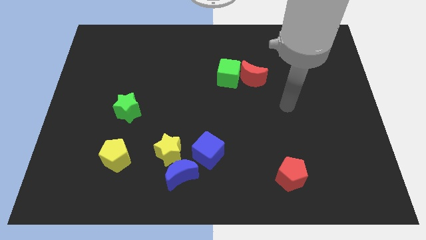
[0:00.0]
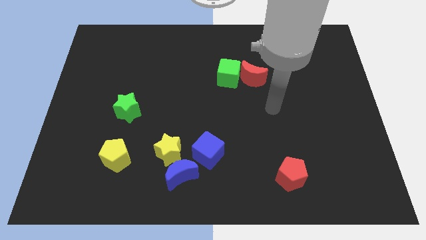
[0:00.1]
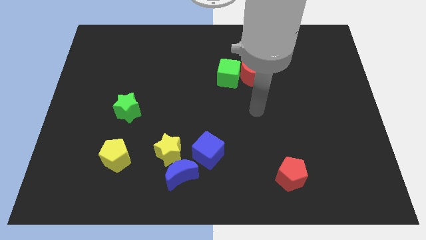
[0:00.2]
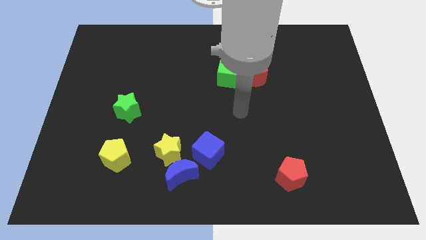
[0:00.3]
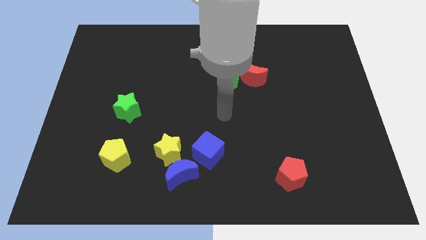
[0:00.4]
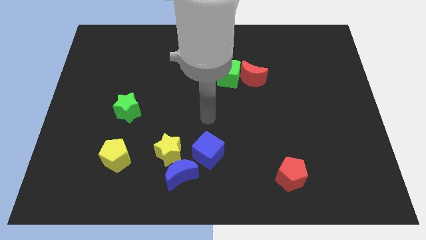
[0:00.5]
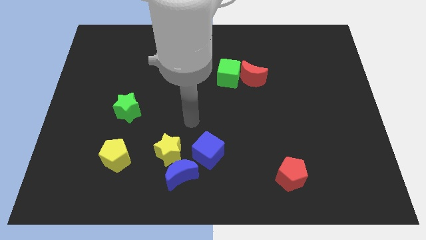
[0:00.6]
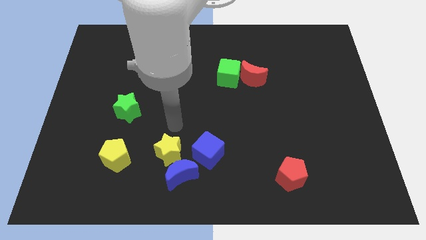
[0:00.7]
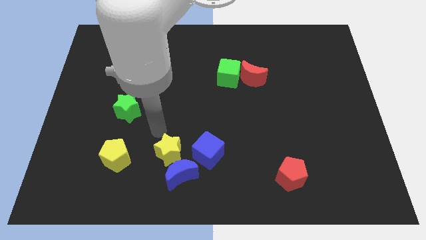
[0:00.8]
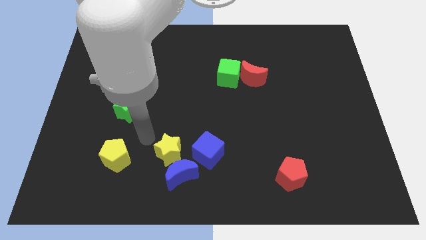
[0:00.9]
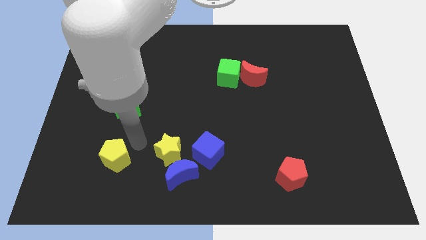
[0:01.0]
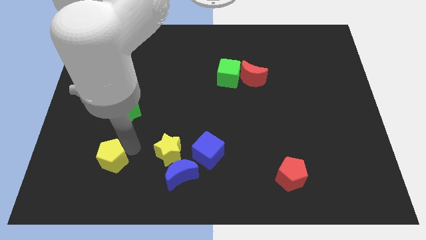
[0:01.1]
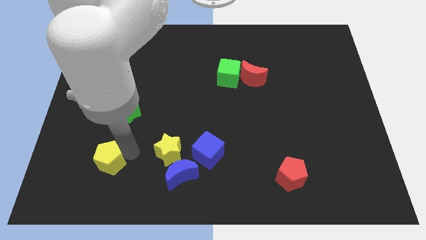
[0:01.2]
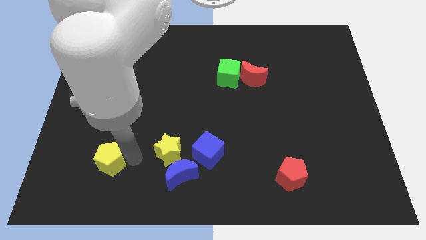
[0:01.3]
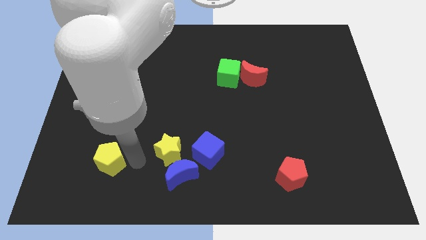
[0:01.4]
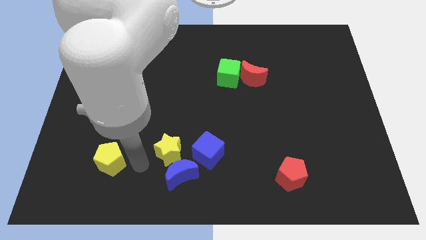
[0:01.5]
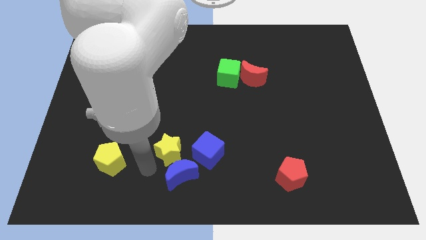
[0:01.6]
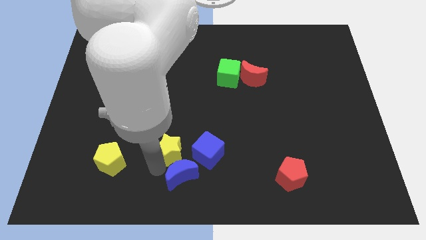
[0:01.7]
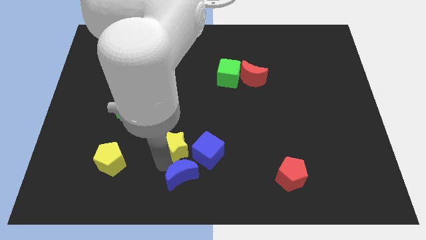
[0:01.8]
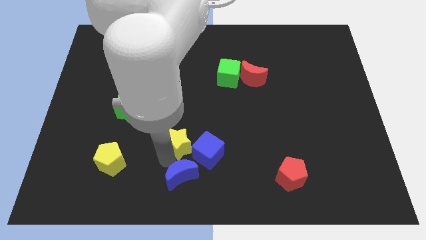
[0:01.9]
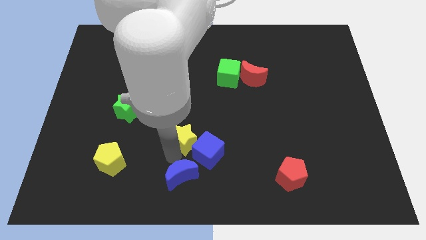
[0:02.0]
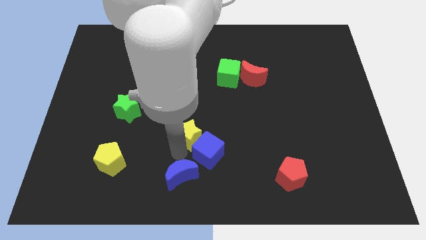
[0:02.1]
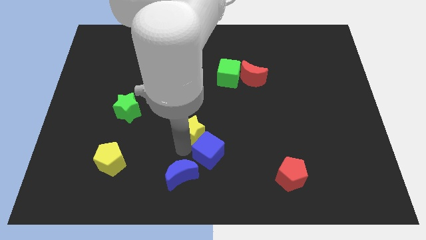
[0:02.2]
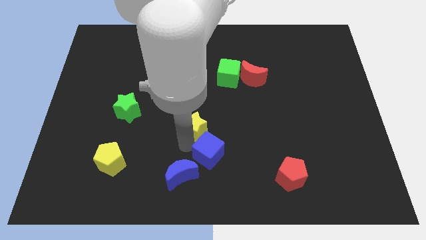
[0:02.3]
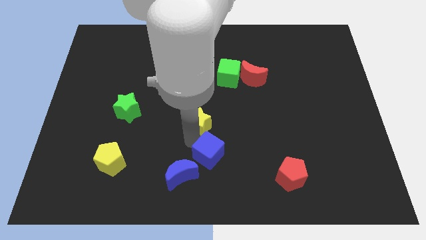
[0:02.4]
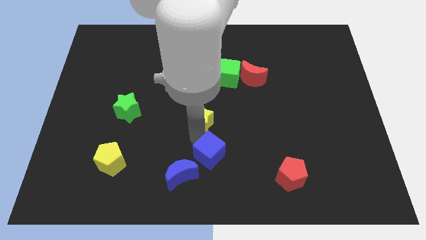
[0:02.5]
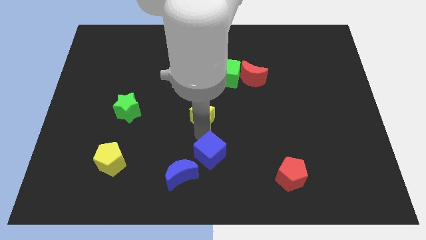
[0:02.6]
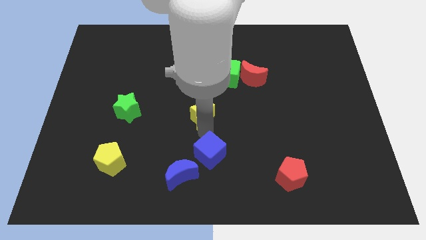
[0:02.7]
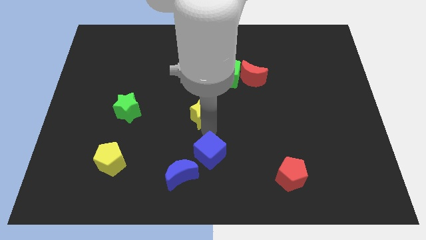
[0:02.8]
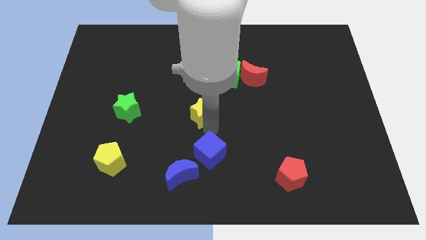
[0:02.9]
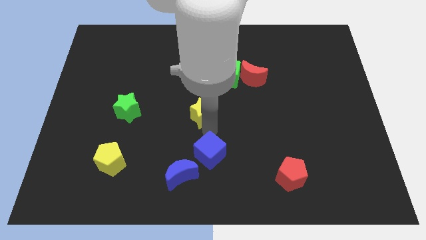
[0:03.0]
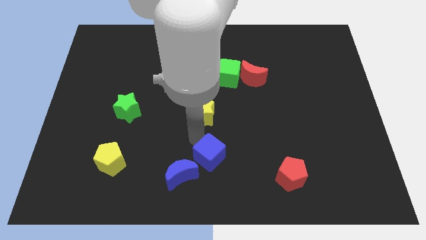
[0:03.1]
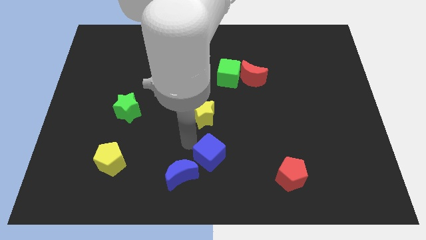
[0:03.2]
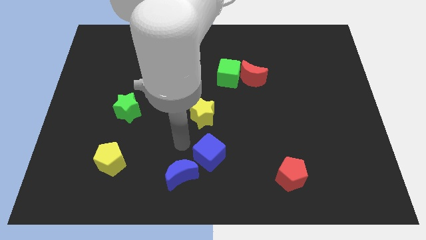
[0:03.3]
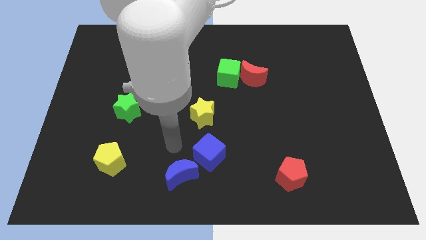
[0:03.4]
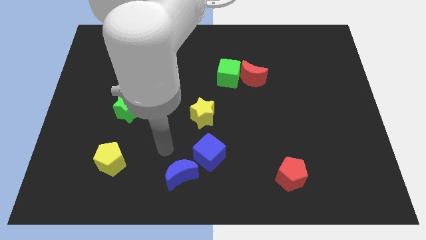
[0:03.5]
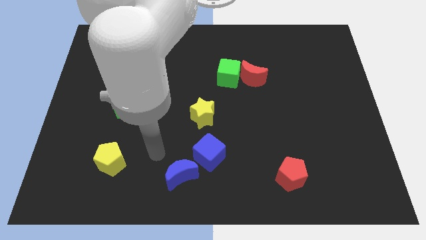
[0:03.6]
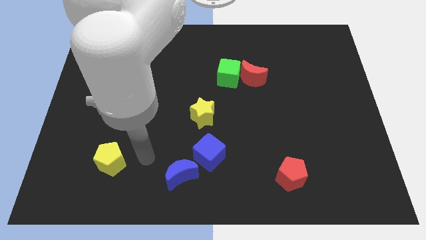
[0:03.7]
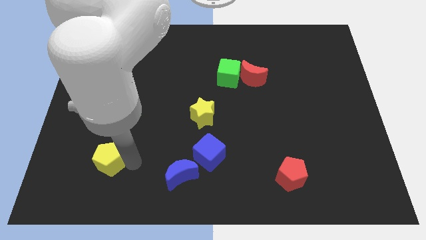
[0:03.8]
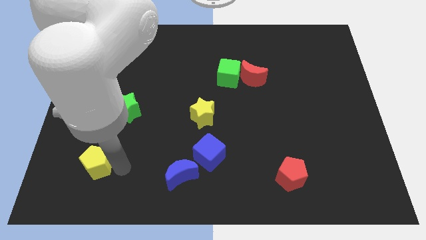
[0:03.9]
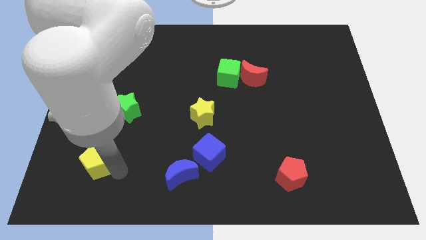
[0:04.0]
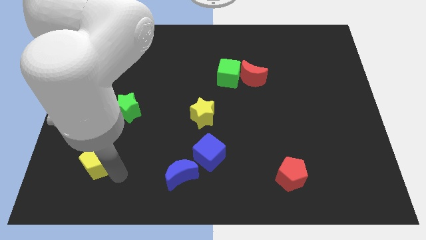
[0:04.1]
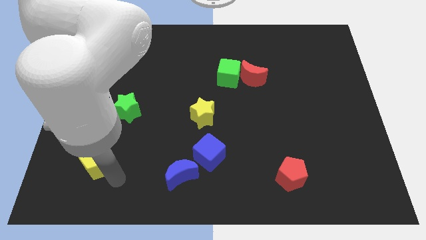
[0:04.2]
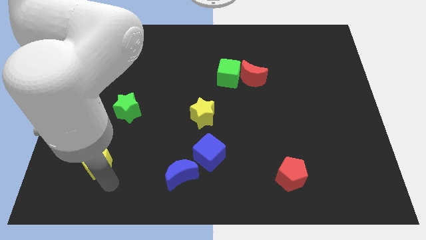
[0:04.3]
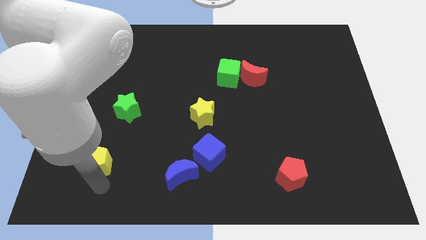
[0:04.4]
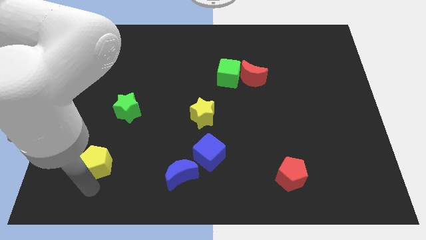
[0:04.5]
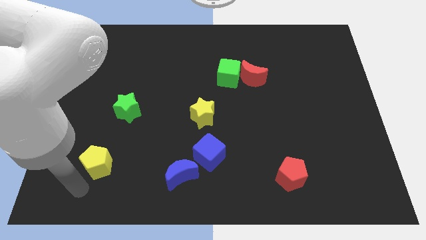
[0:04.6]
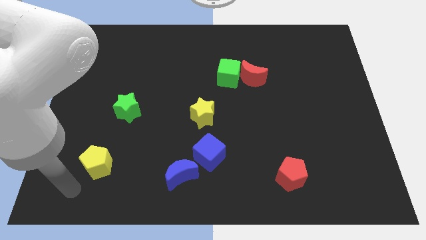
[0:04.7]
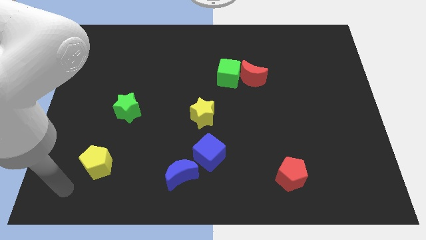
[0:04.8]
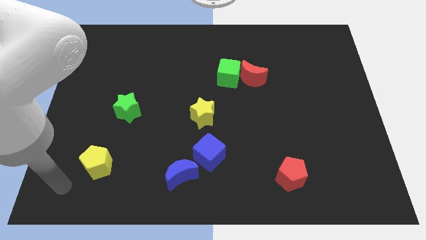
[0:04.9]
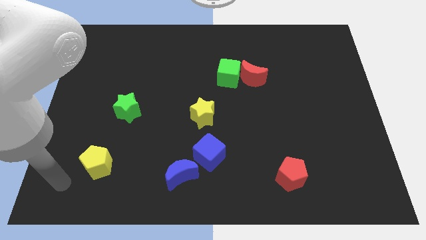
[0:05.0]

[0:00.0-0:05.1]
move yellow blocks in opposite directions

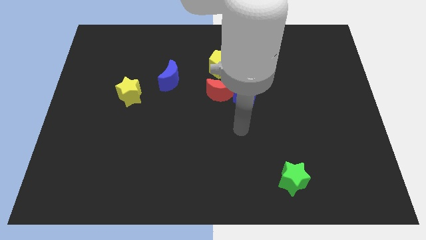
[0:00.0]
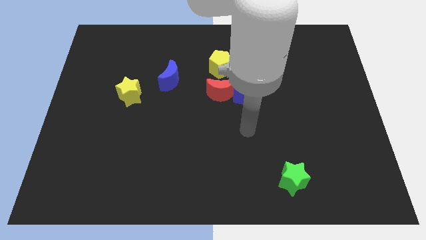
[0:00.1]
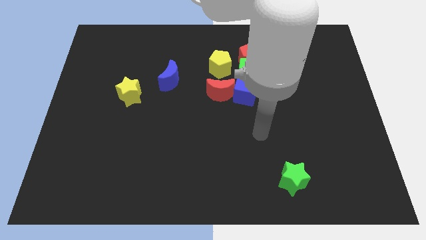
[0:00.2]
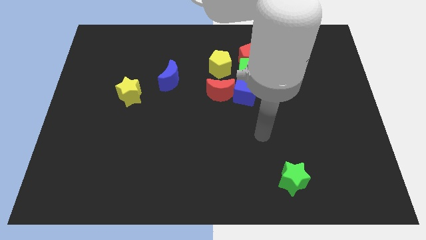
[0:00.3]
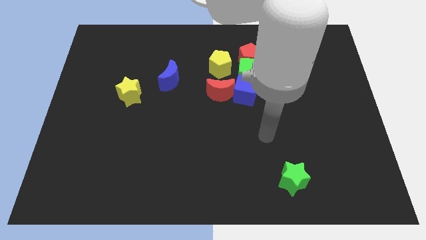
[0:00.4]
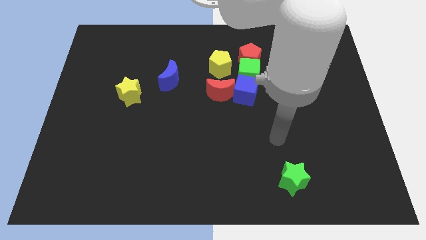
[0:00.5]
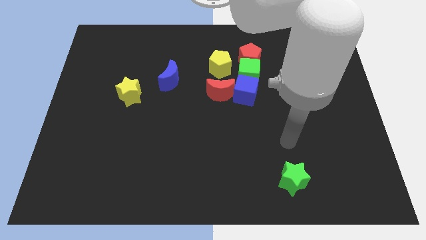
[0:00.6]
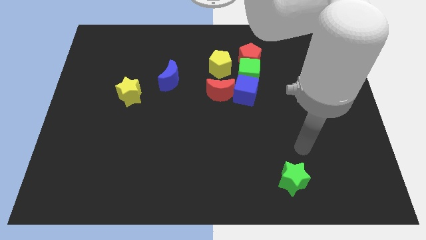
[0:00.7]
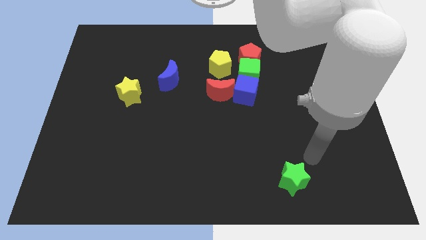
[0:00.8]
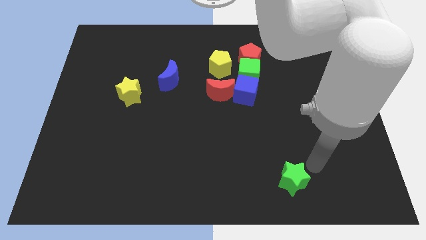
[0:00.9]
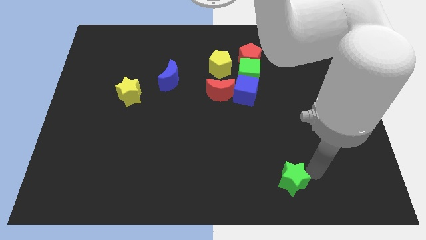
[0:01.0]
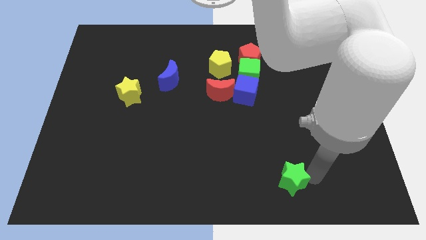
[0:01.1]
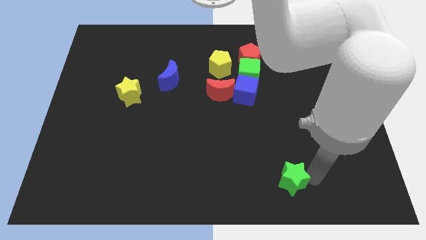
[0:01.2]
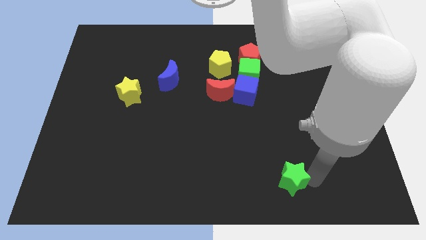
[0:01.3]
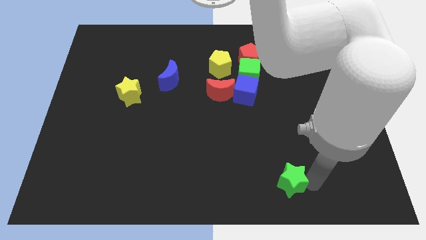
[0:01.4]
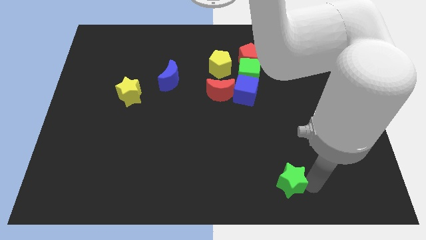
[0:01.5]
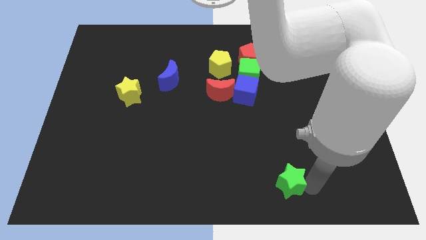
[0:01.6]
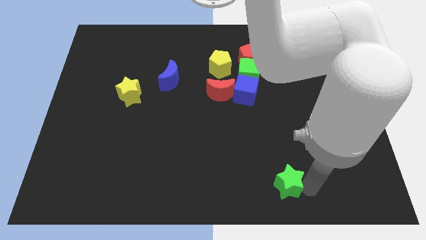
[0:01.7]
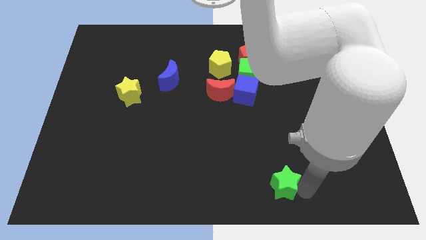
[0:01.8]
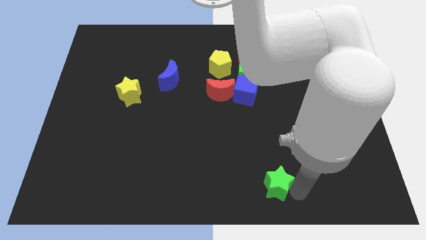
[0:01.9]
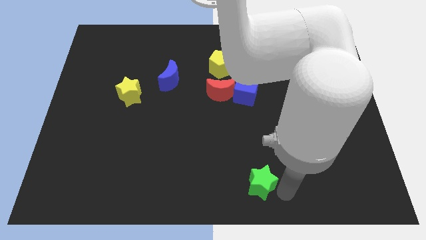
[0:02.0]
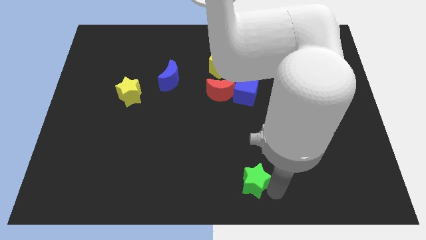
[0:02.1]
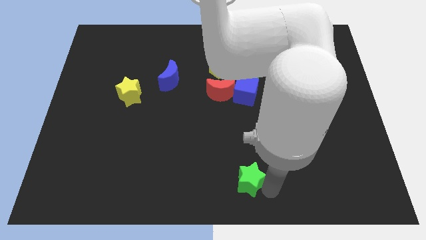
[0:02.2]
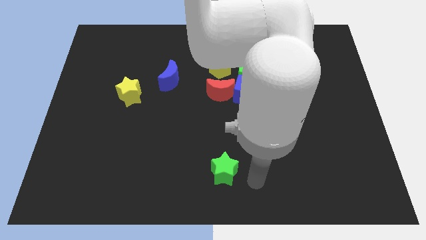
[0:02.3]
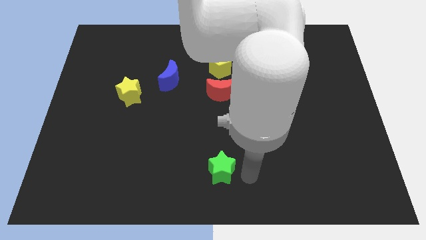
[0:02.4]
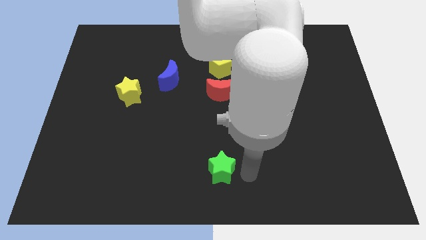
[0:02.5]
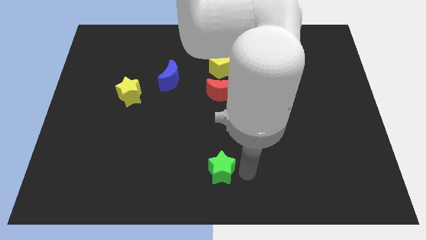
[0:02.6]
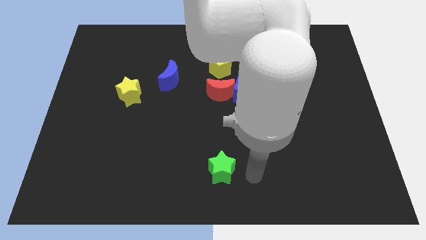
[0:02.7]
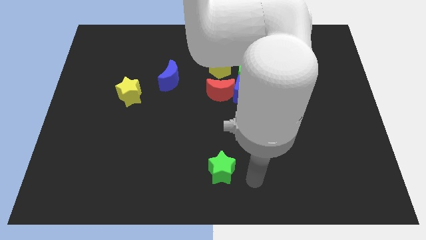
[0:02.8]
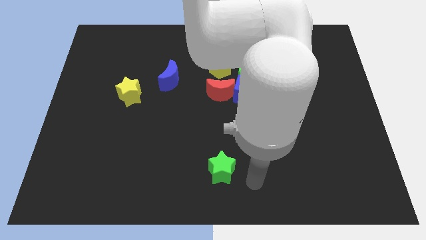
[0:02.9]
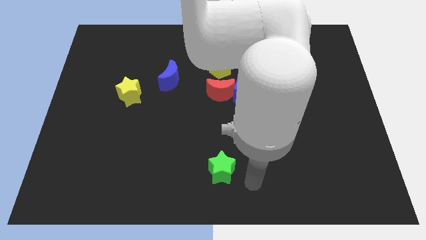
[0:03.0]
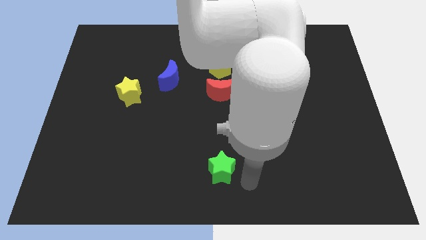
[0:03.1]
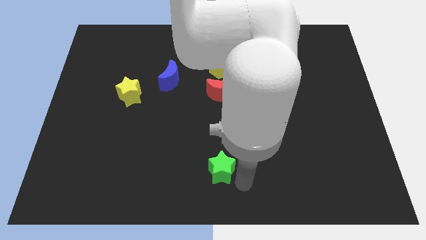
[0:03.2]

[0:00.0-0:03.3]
place the green star below the red moon

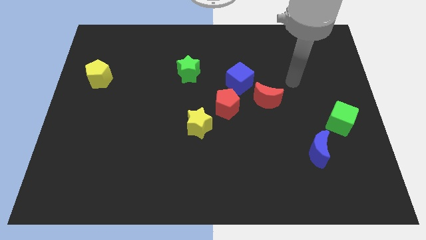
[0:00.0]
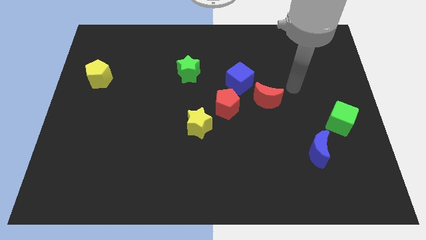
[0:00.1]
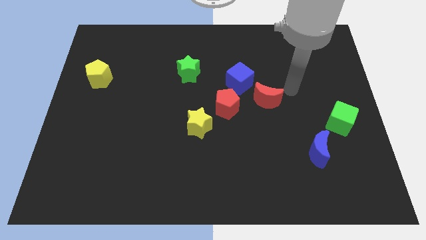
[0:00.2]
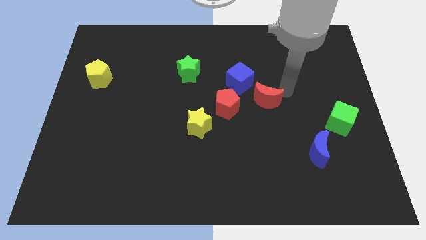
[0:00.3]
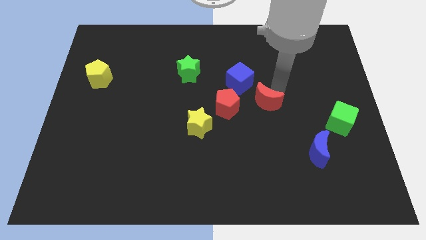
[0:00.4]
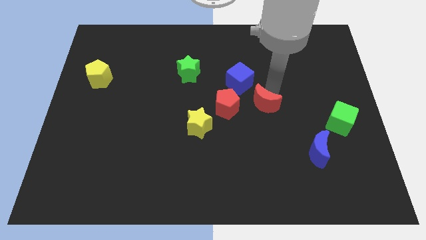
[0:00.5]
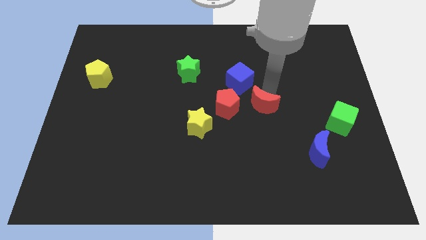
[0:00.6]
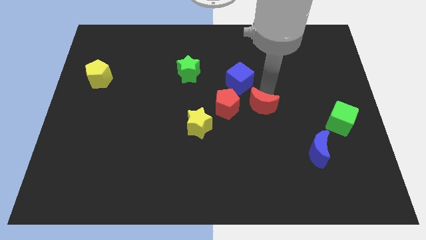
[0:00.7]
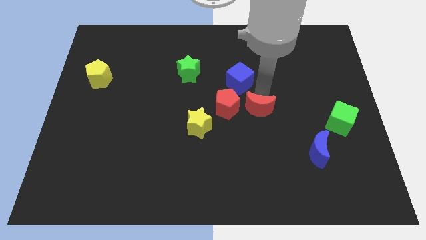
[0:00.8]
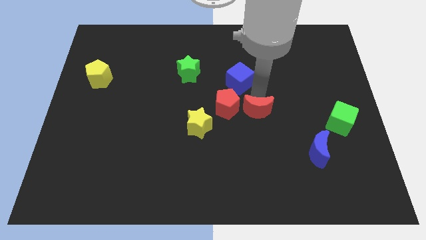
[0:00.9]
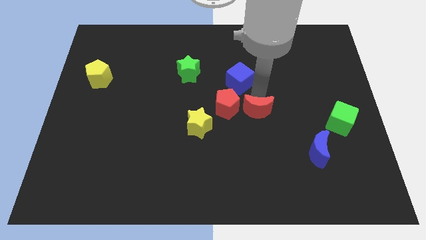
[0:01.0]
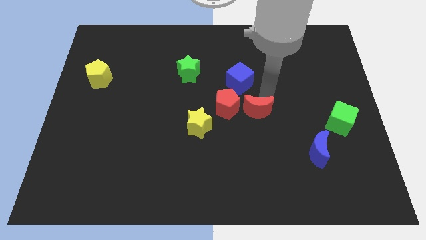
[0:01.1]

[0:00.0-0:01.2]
place the red moon to the right side of red pentagon
